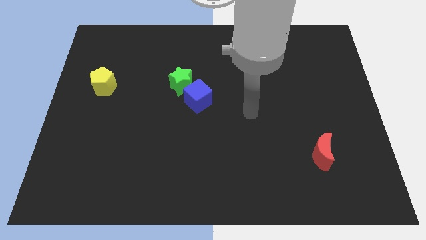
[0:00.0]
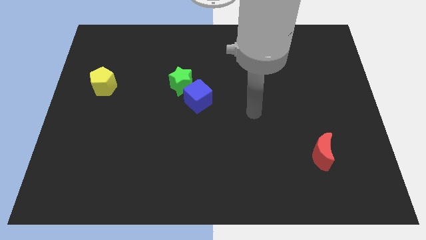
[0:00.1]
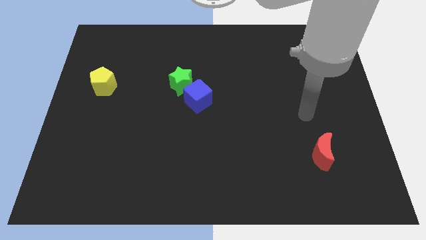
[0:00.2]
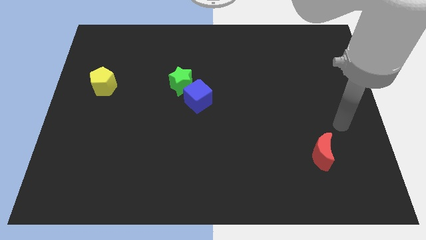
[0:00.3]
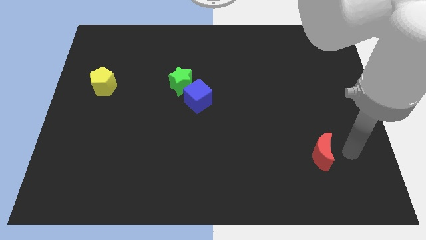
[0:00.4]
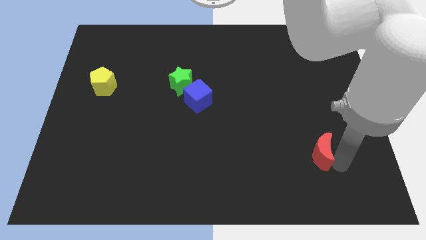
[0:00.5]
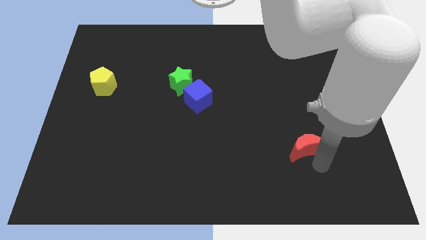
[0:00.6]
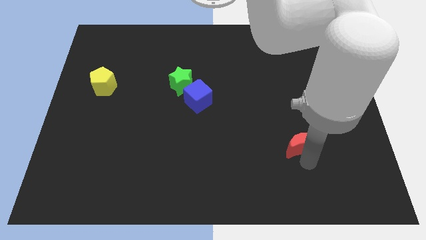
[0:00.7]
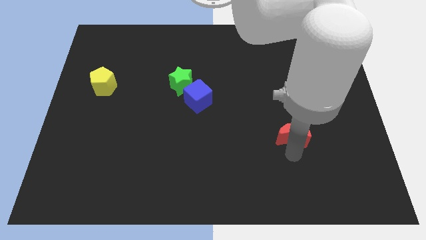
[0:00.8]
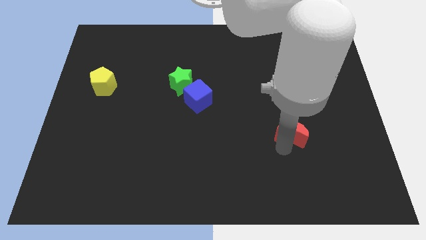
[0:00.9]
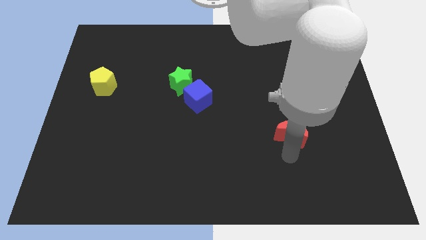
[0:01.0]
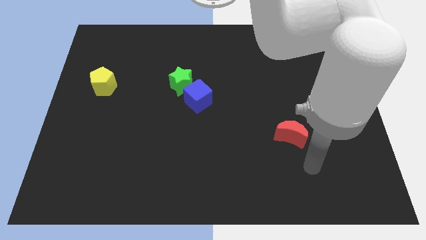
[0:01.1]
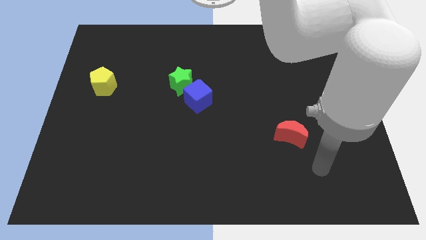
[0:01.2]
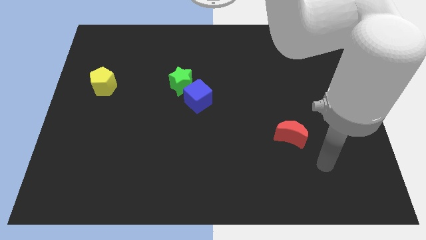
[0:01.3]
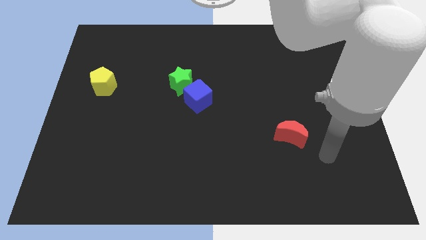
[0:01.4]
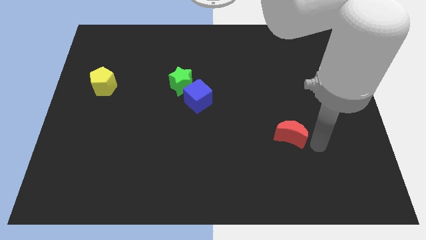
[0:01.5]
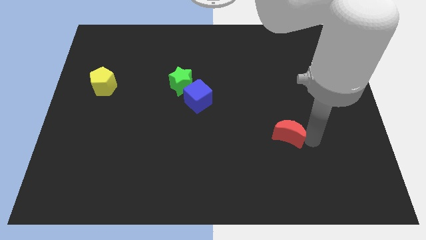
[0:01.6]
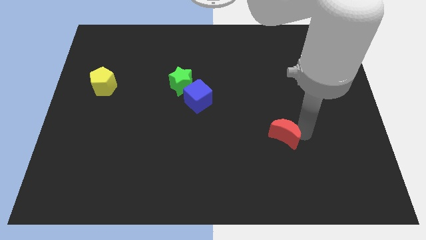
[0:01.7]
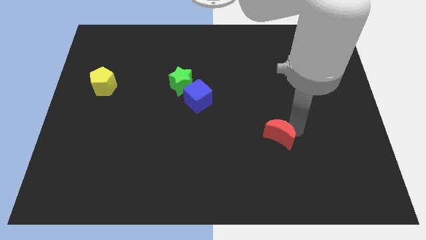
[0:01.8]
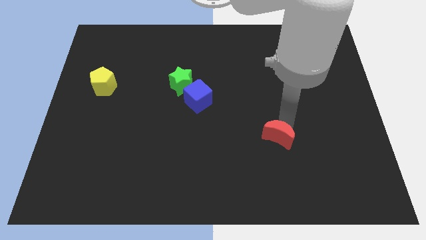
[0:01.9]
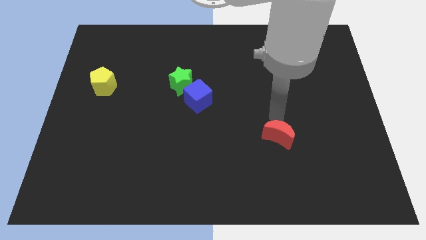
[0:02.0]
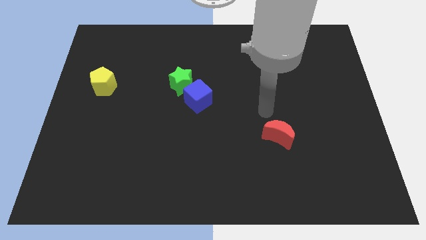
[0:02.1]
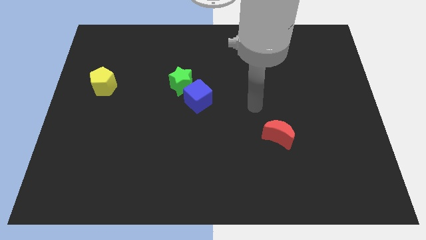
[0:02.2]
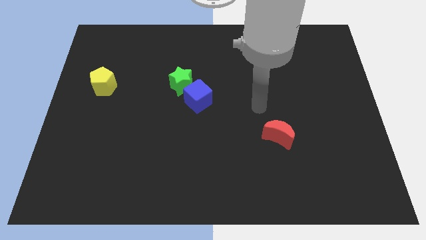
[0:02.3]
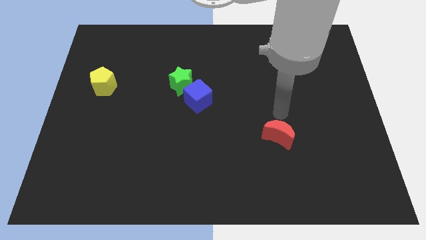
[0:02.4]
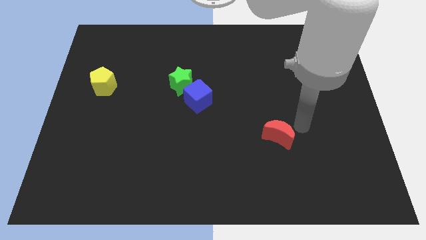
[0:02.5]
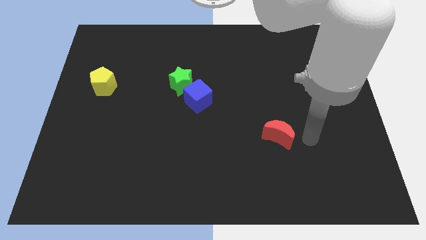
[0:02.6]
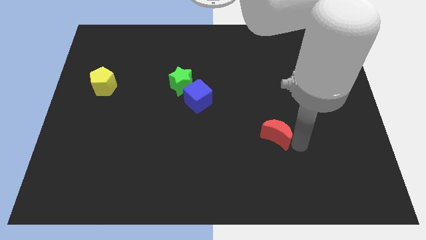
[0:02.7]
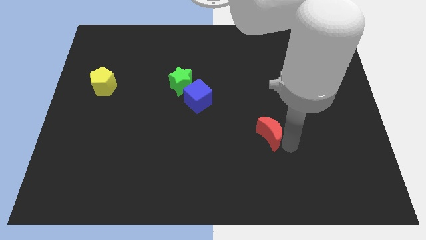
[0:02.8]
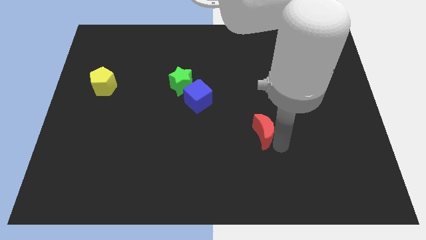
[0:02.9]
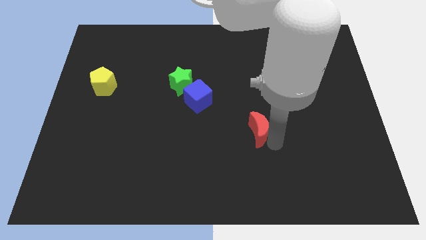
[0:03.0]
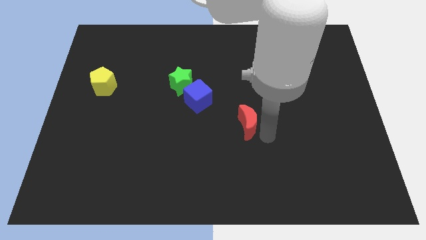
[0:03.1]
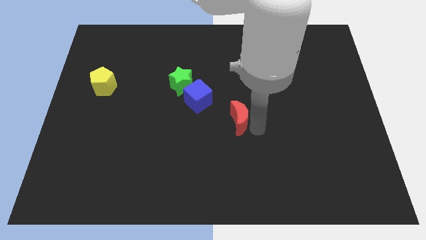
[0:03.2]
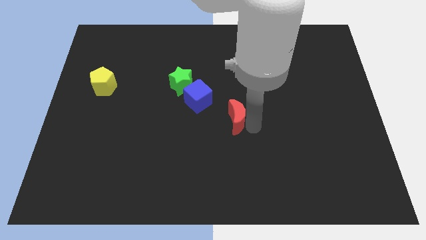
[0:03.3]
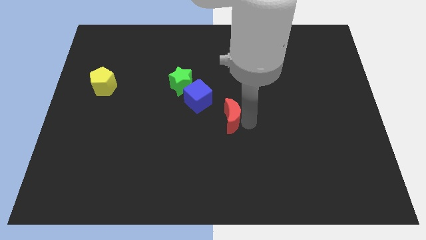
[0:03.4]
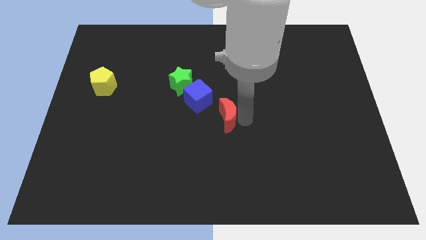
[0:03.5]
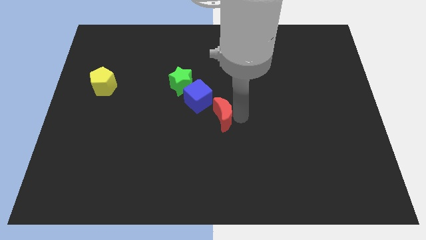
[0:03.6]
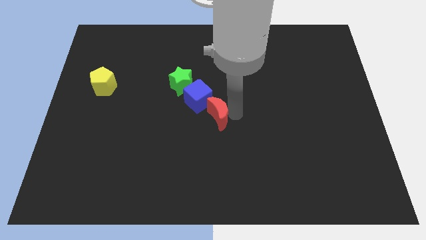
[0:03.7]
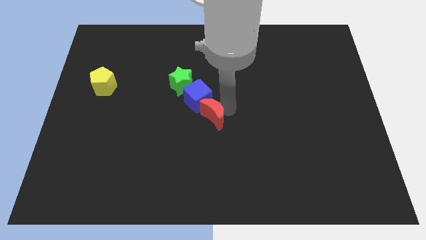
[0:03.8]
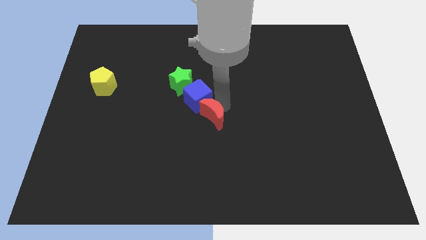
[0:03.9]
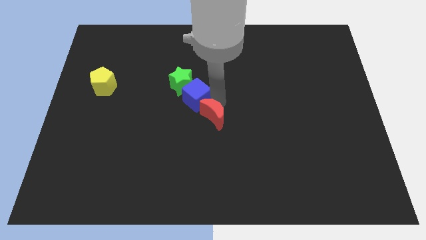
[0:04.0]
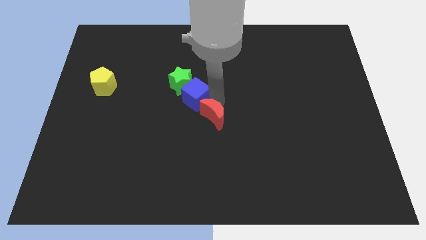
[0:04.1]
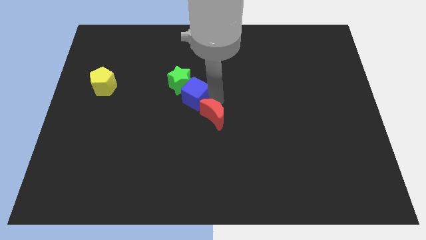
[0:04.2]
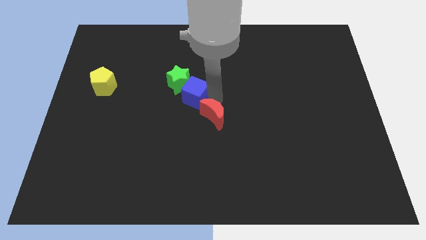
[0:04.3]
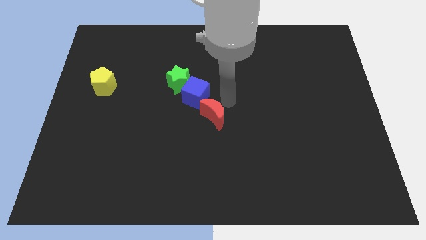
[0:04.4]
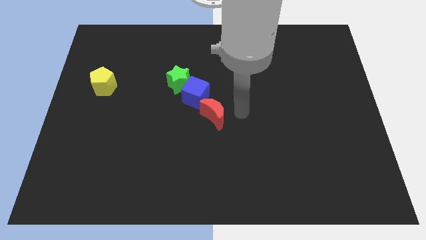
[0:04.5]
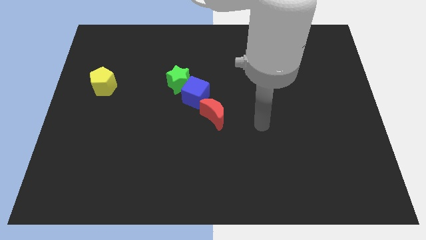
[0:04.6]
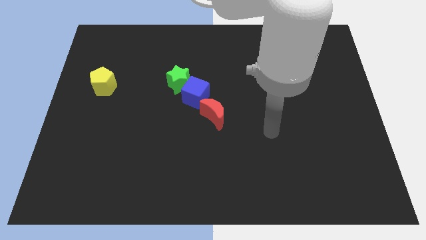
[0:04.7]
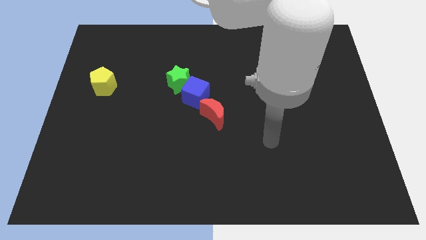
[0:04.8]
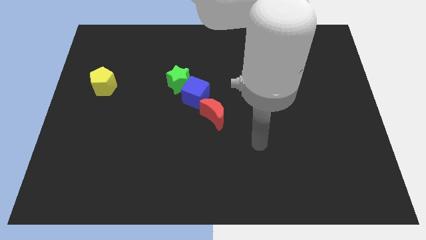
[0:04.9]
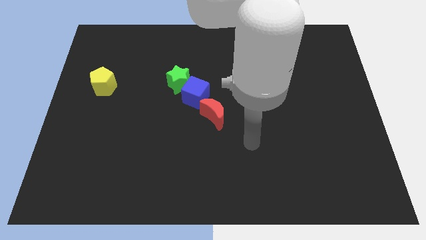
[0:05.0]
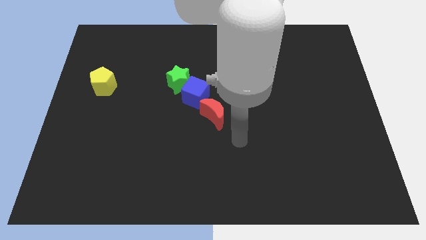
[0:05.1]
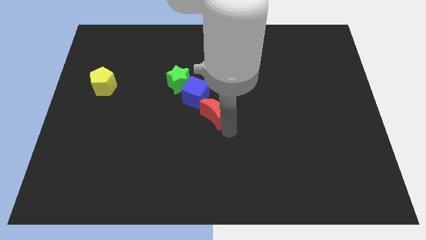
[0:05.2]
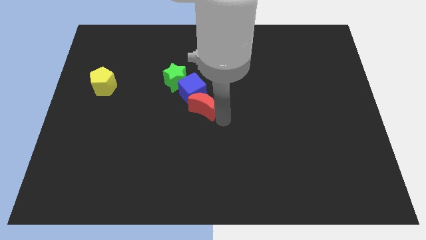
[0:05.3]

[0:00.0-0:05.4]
push the red moon towards the cube

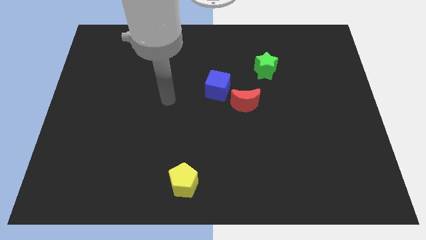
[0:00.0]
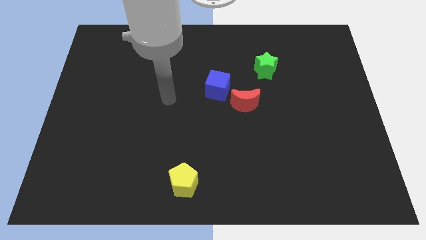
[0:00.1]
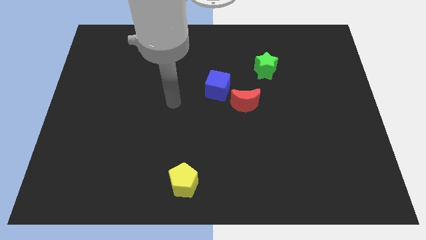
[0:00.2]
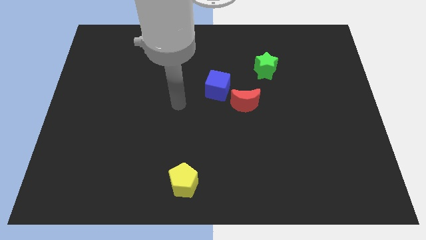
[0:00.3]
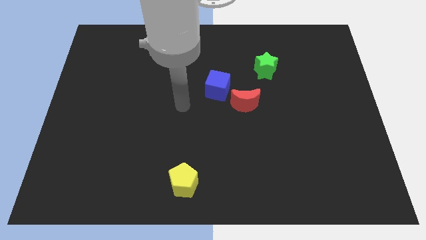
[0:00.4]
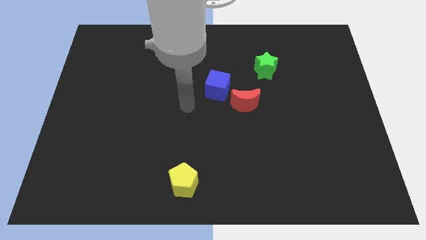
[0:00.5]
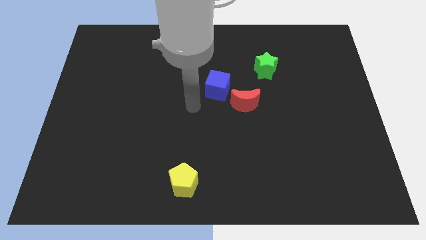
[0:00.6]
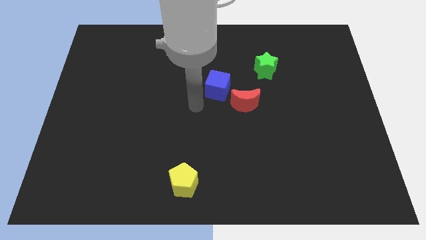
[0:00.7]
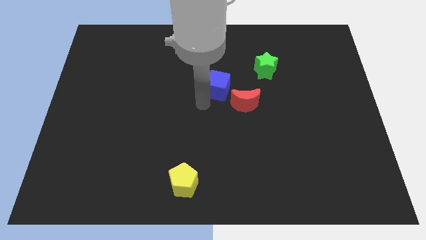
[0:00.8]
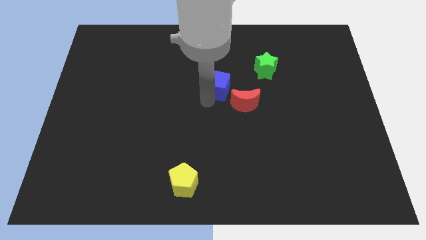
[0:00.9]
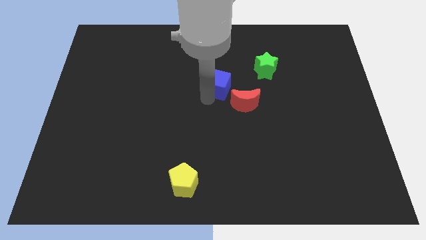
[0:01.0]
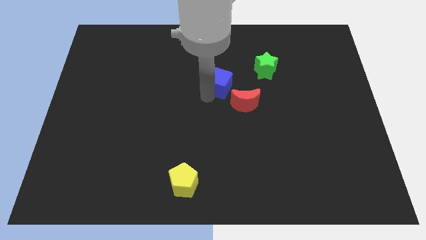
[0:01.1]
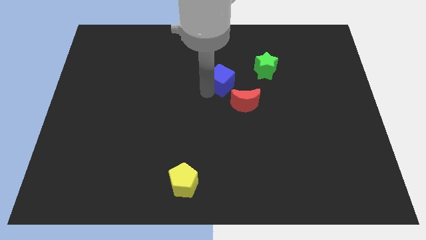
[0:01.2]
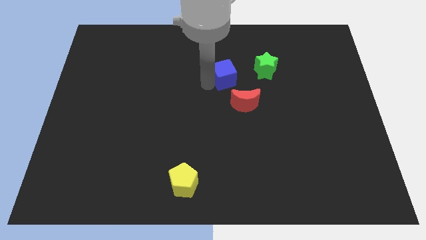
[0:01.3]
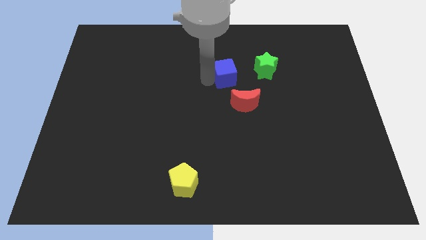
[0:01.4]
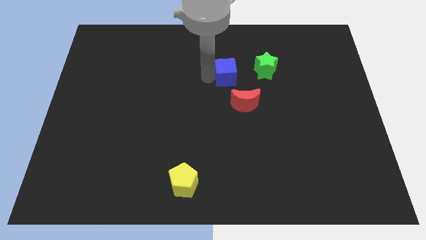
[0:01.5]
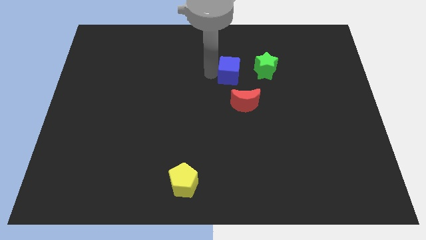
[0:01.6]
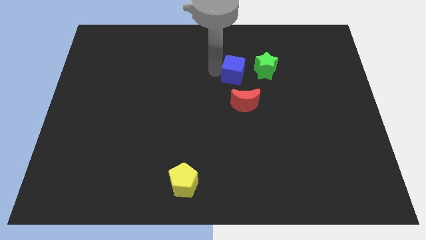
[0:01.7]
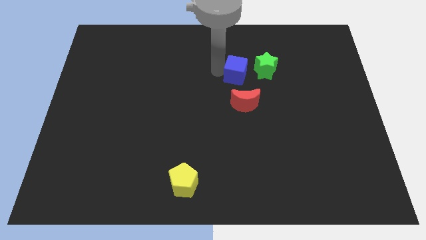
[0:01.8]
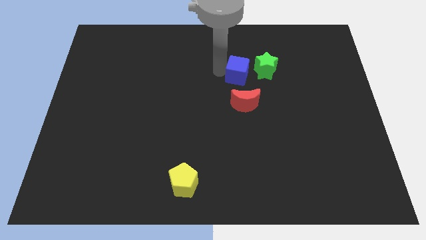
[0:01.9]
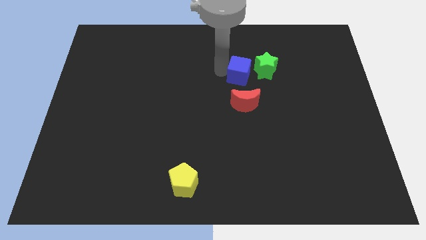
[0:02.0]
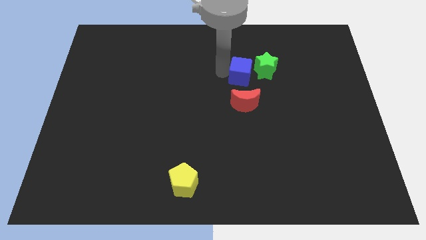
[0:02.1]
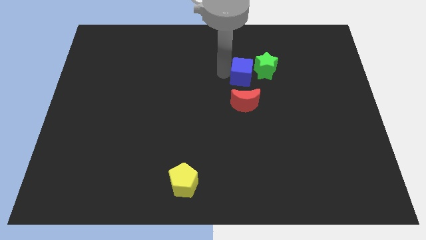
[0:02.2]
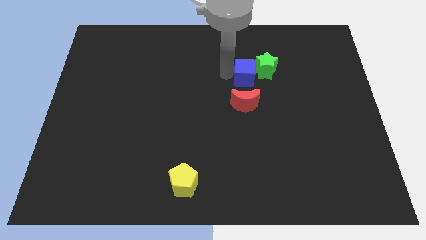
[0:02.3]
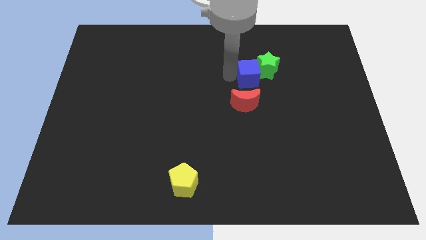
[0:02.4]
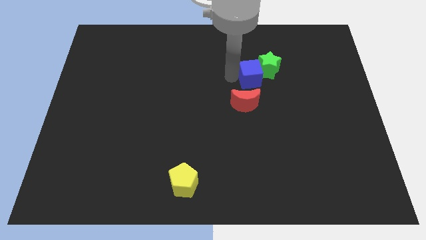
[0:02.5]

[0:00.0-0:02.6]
put the blue cube next to the star

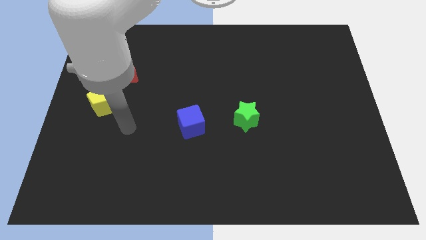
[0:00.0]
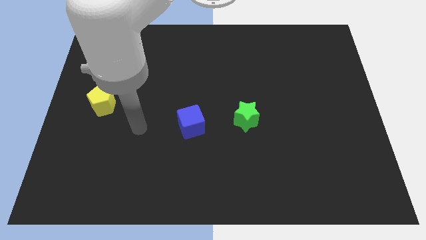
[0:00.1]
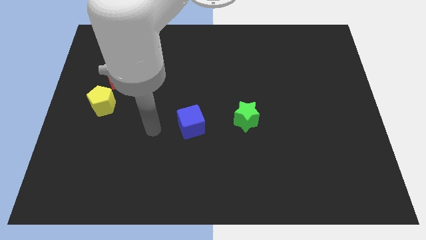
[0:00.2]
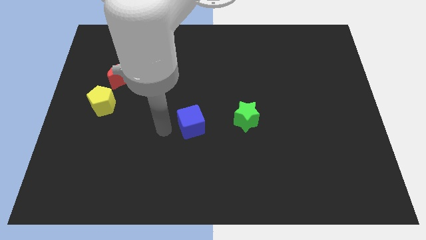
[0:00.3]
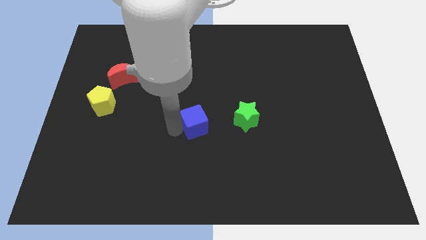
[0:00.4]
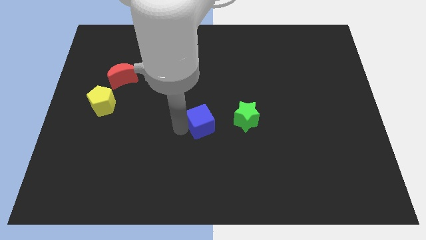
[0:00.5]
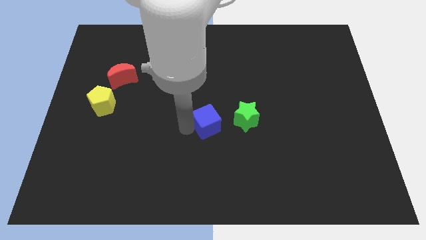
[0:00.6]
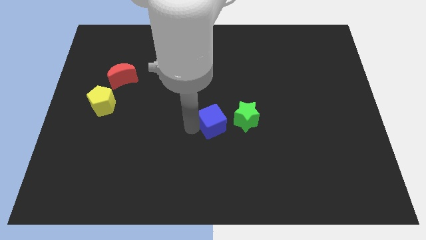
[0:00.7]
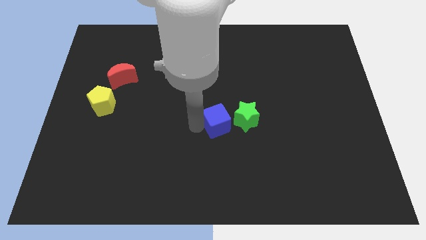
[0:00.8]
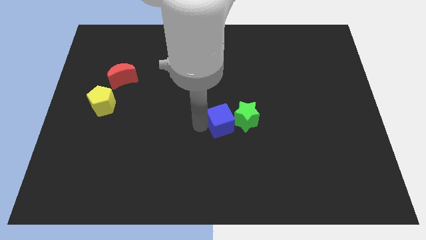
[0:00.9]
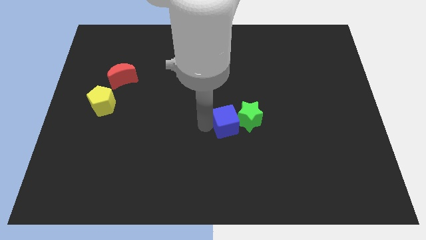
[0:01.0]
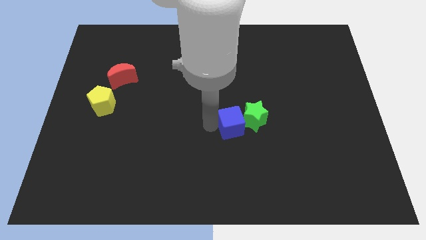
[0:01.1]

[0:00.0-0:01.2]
put the cube next to the green star
